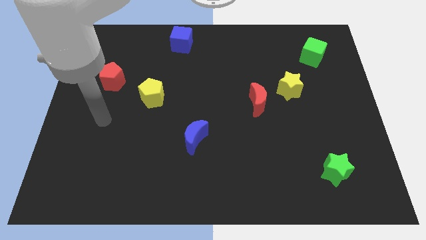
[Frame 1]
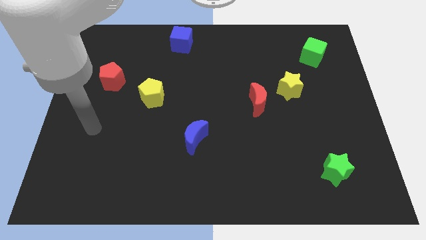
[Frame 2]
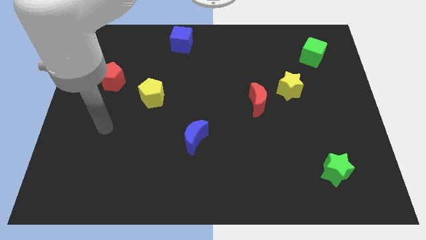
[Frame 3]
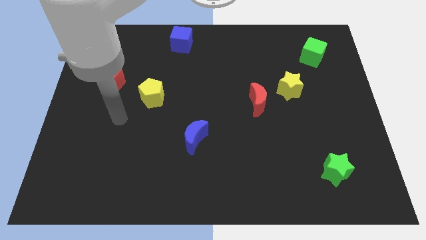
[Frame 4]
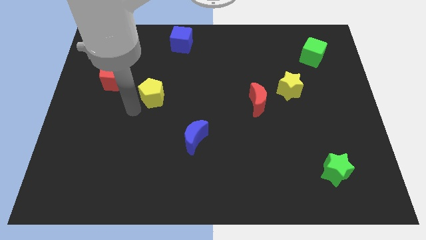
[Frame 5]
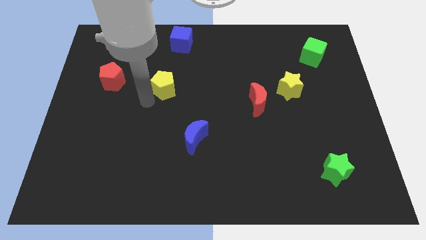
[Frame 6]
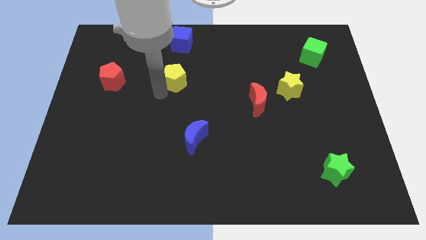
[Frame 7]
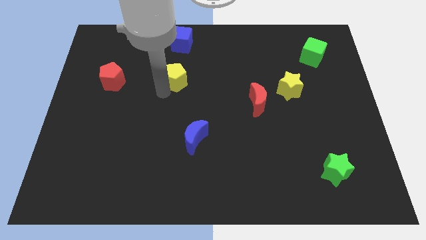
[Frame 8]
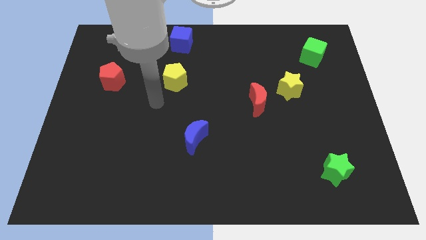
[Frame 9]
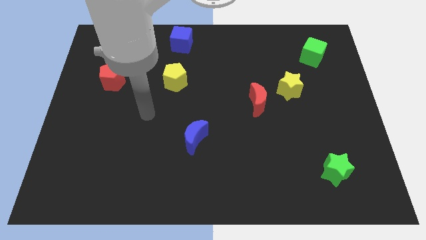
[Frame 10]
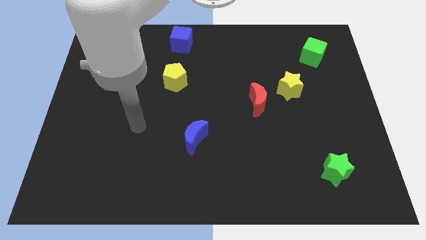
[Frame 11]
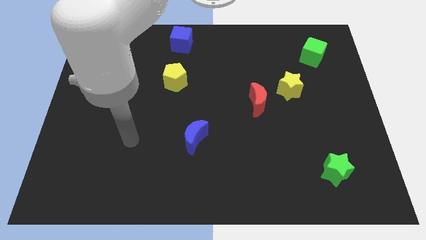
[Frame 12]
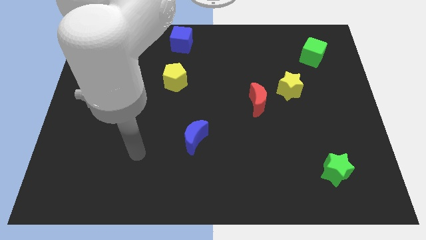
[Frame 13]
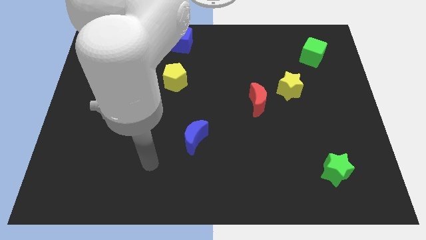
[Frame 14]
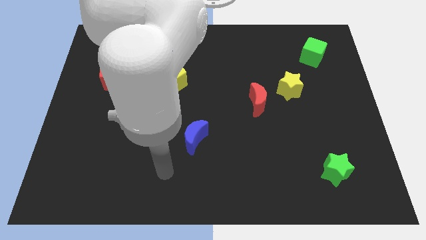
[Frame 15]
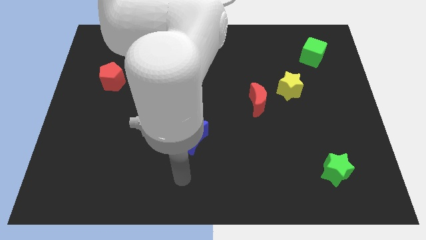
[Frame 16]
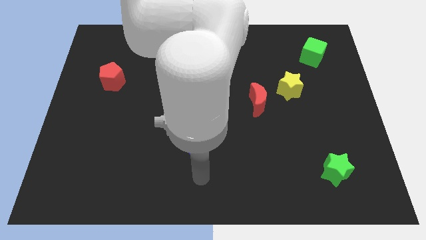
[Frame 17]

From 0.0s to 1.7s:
push yellow pentagon upwards

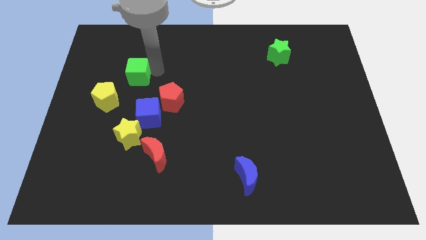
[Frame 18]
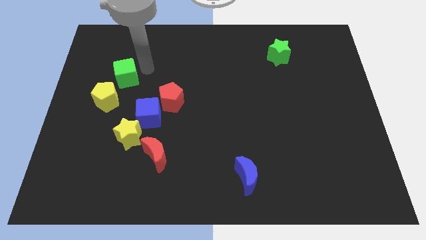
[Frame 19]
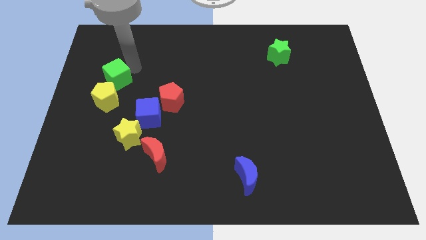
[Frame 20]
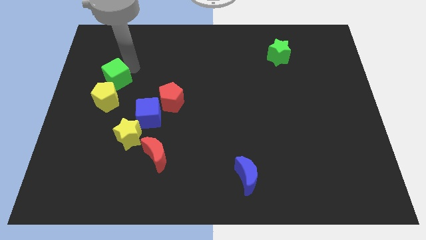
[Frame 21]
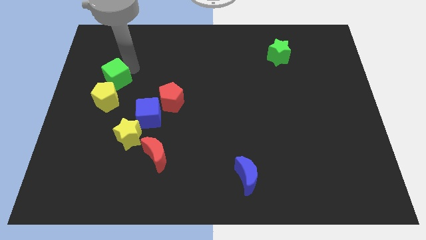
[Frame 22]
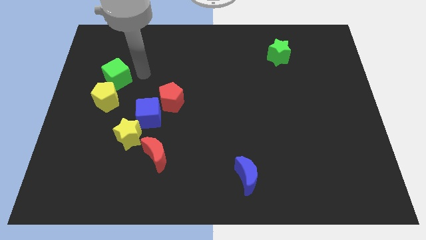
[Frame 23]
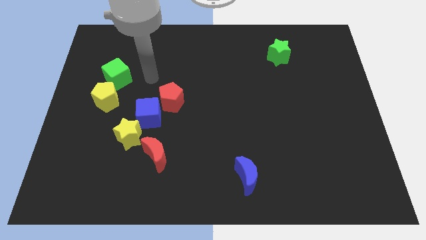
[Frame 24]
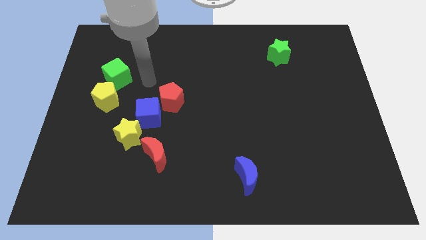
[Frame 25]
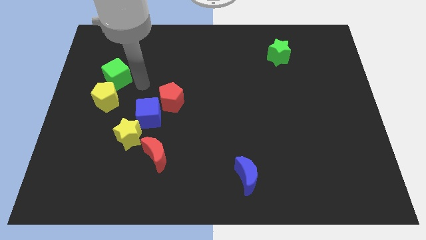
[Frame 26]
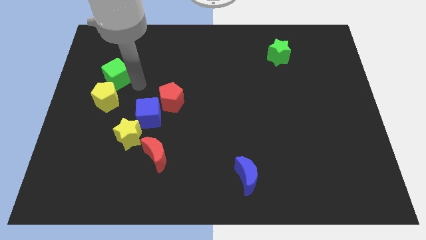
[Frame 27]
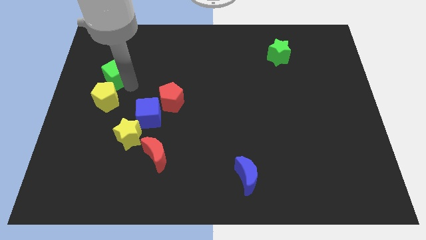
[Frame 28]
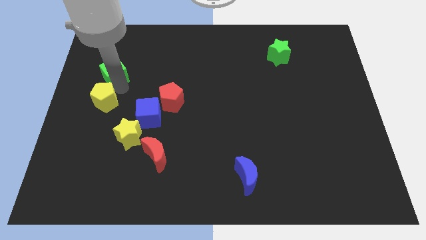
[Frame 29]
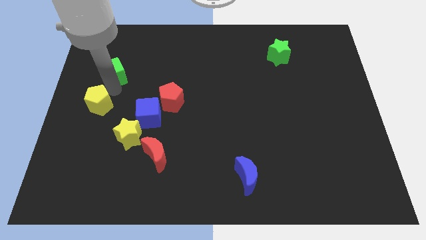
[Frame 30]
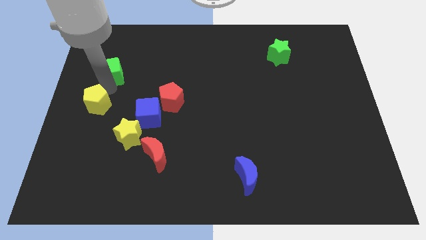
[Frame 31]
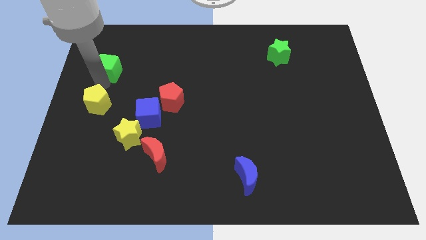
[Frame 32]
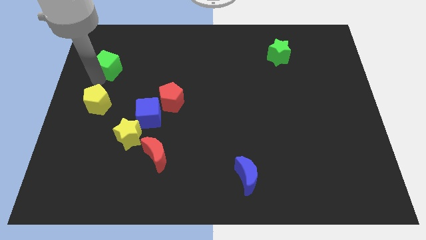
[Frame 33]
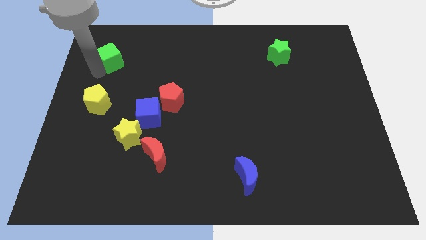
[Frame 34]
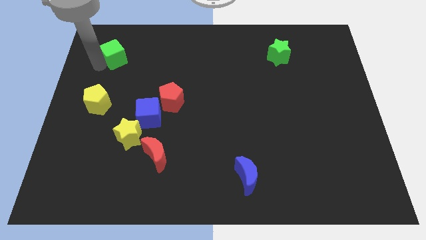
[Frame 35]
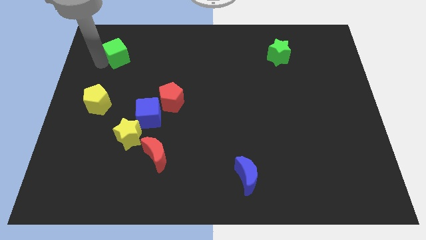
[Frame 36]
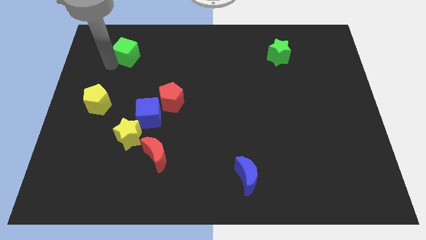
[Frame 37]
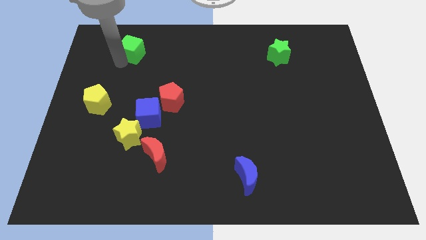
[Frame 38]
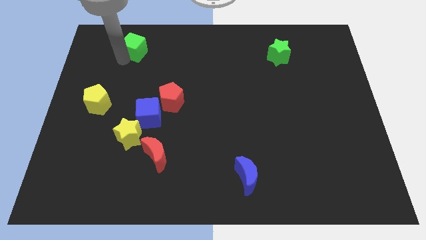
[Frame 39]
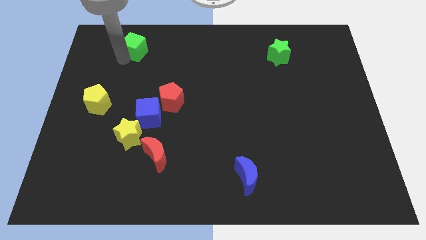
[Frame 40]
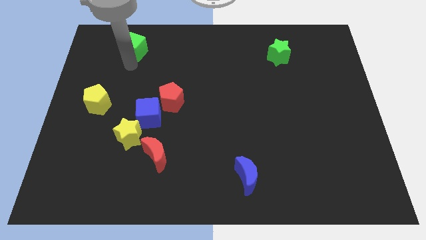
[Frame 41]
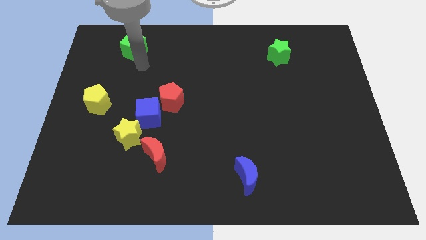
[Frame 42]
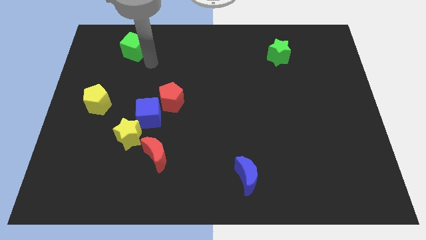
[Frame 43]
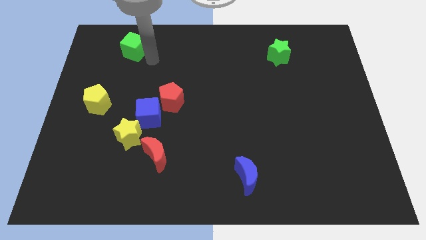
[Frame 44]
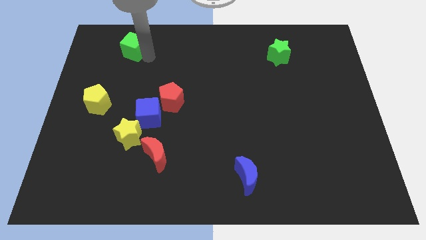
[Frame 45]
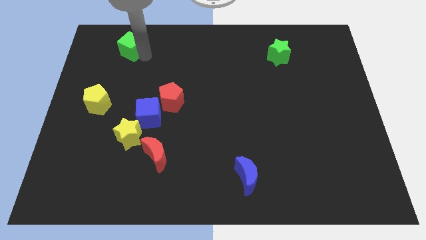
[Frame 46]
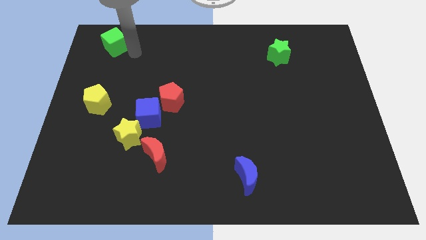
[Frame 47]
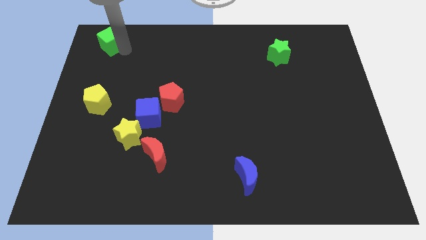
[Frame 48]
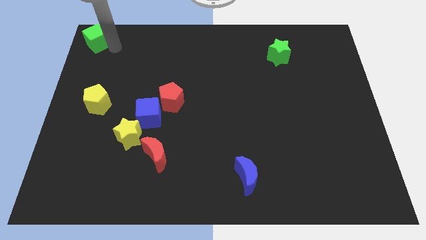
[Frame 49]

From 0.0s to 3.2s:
place green cube vertically above yellow pentagon

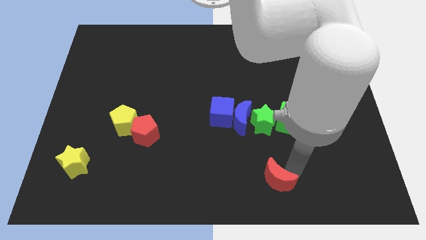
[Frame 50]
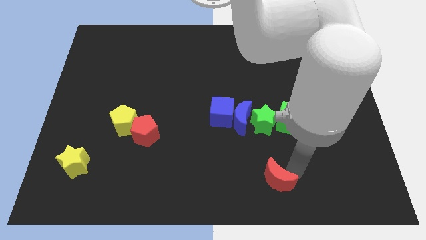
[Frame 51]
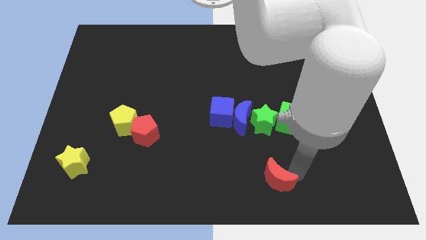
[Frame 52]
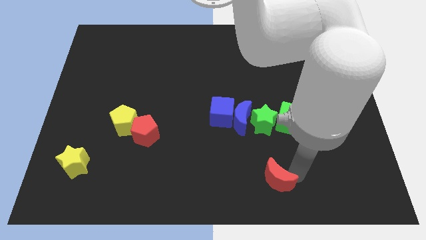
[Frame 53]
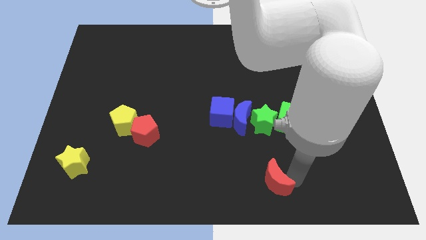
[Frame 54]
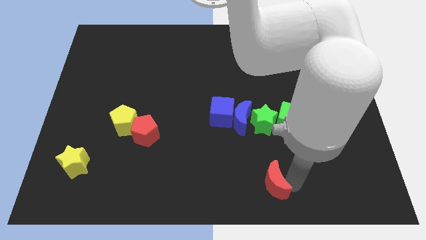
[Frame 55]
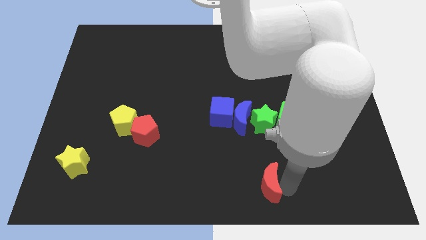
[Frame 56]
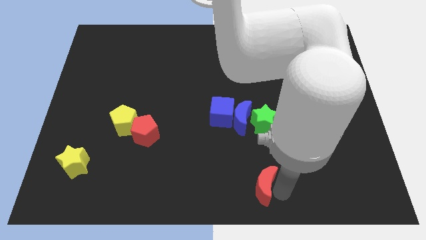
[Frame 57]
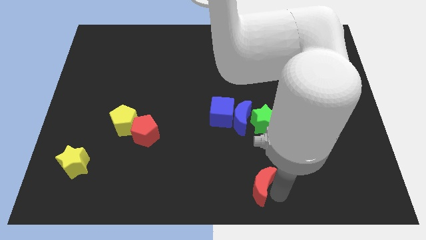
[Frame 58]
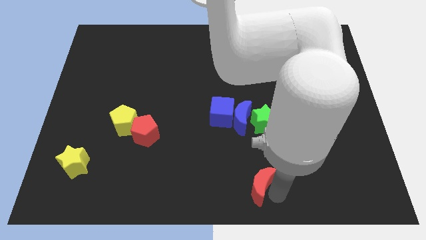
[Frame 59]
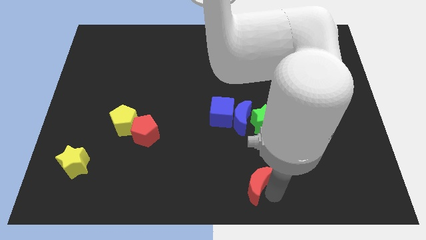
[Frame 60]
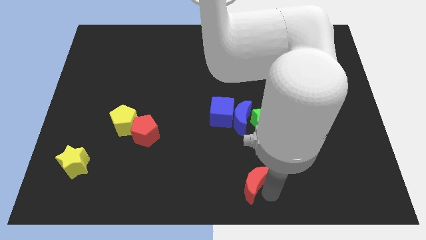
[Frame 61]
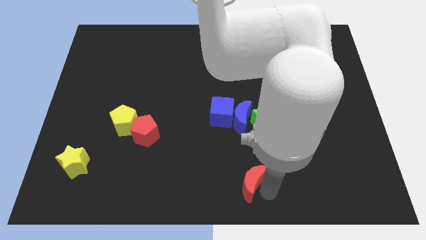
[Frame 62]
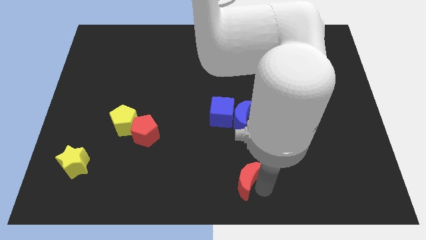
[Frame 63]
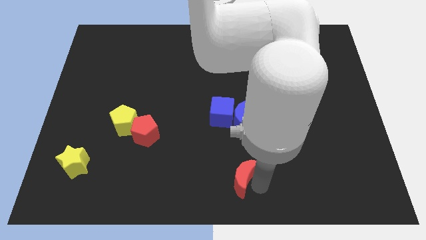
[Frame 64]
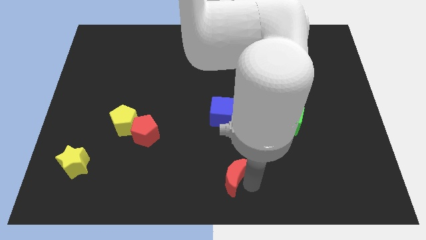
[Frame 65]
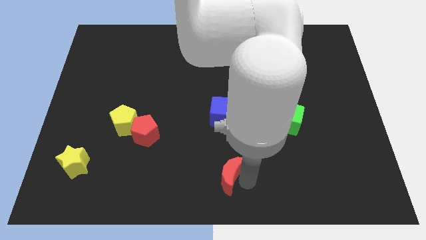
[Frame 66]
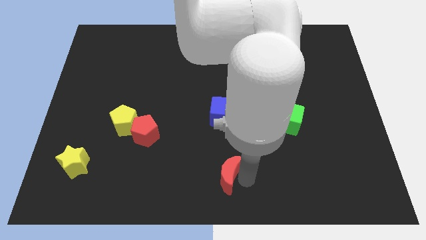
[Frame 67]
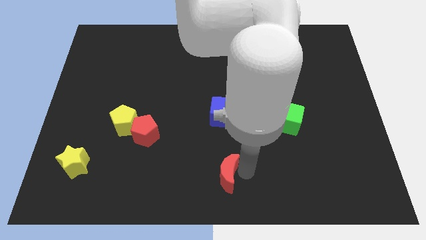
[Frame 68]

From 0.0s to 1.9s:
move the red crescent to the bottom center of the board

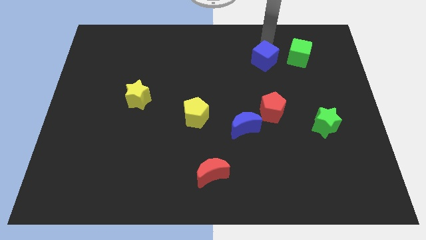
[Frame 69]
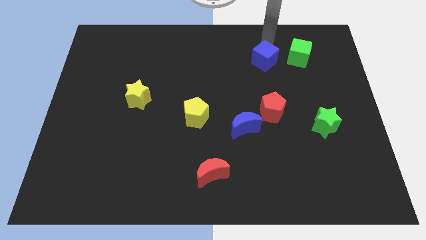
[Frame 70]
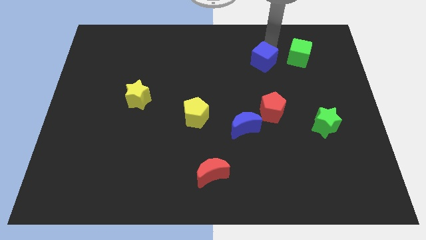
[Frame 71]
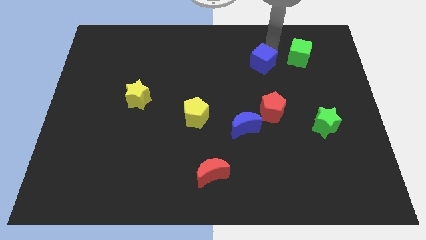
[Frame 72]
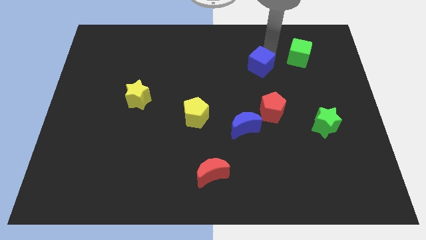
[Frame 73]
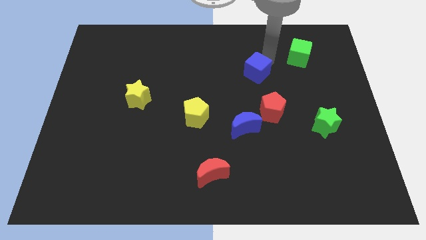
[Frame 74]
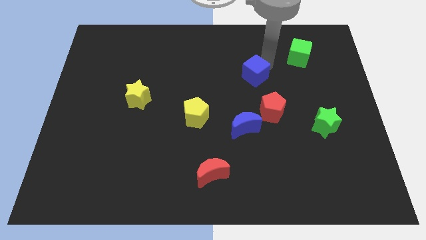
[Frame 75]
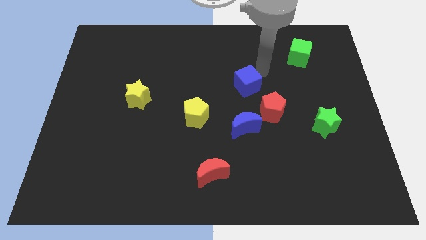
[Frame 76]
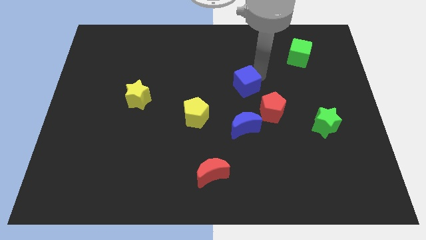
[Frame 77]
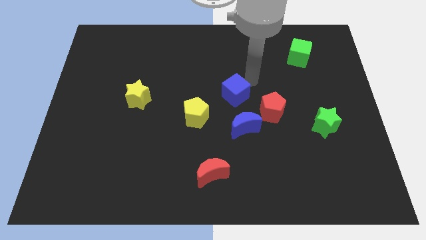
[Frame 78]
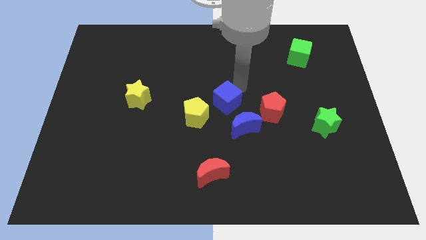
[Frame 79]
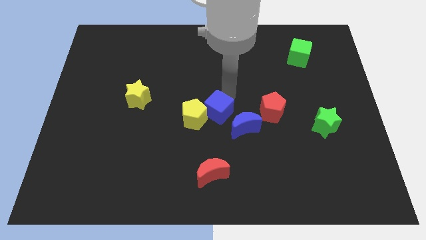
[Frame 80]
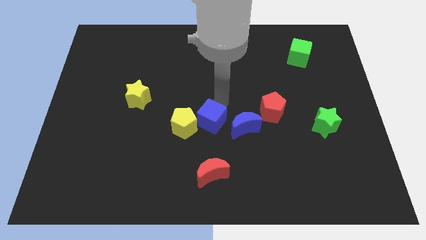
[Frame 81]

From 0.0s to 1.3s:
push the blue cube into the yellow pentagon
